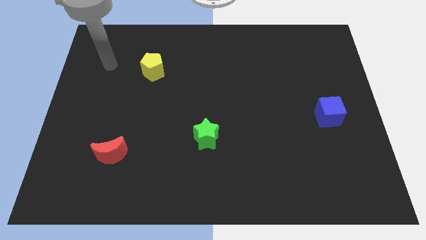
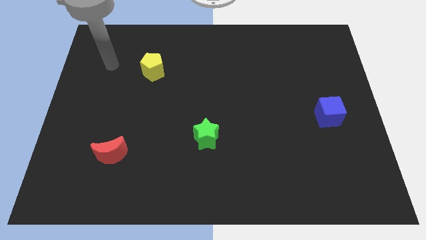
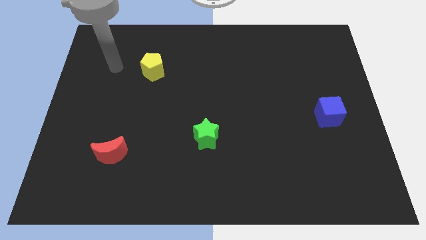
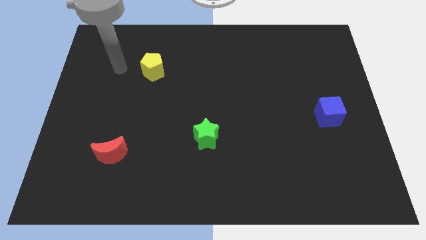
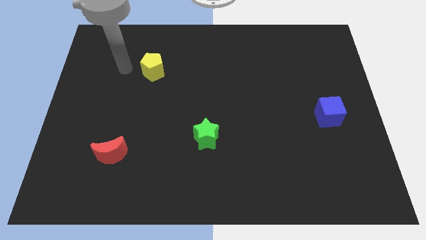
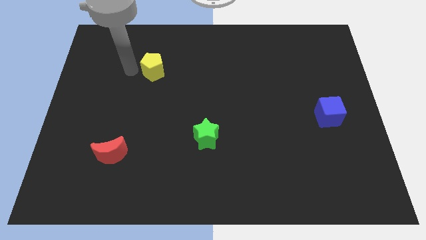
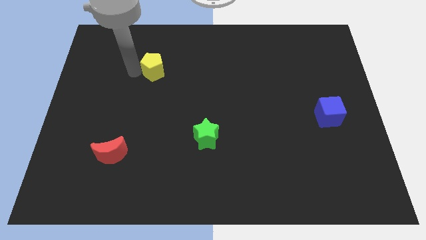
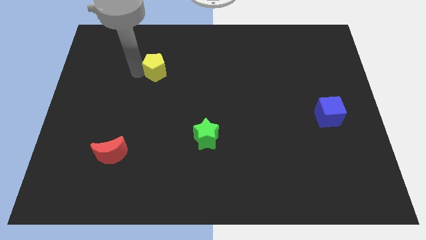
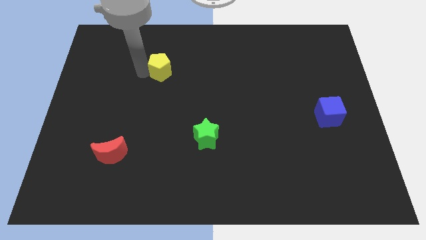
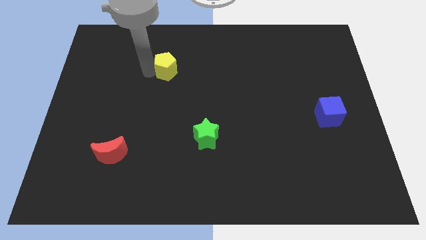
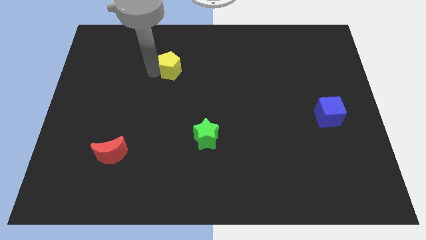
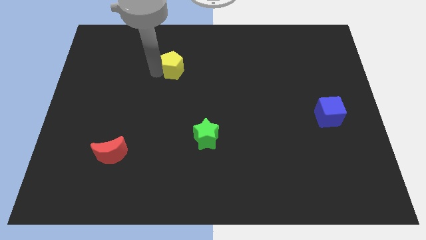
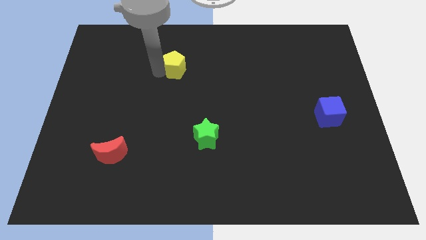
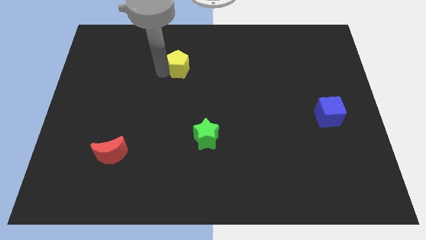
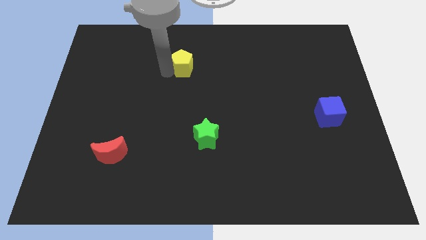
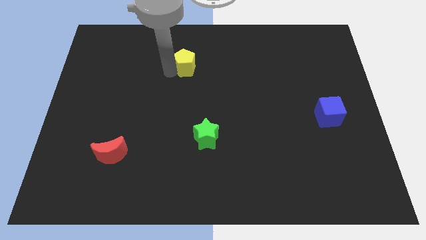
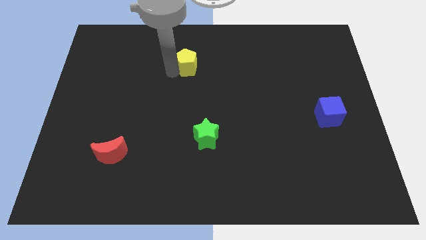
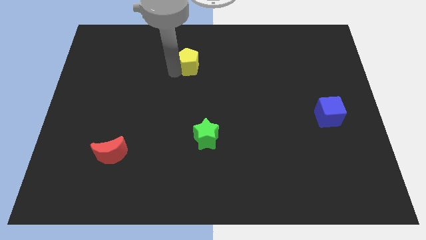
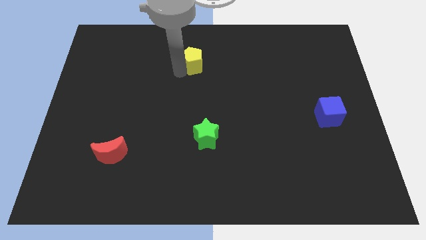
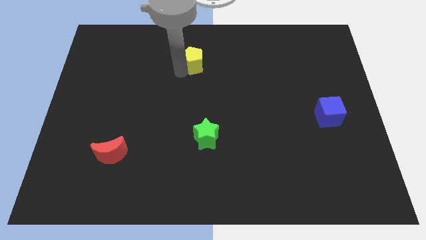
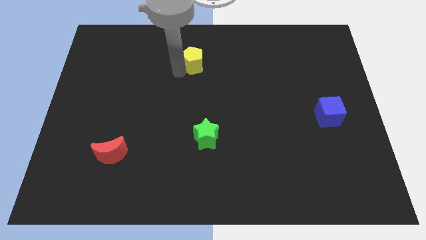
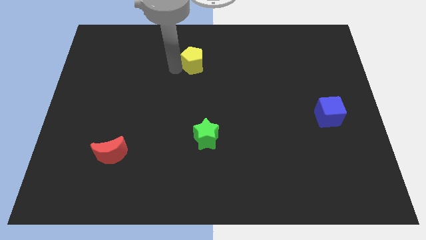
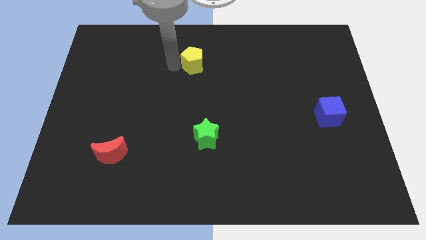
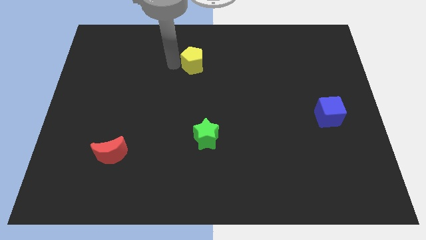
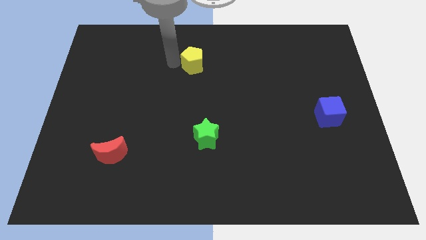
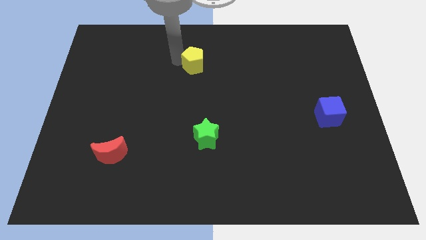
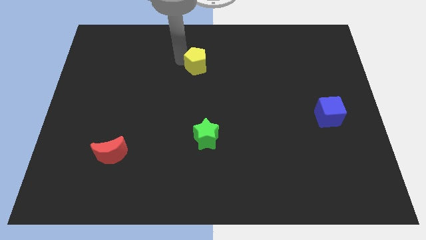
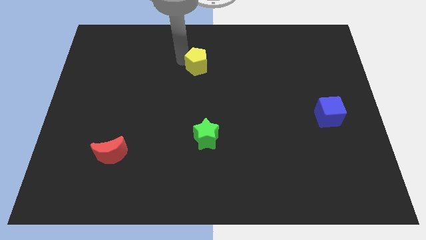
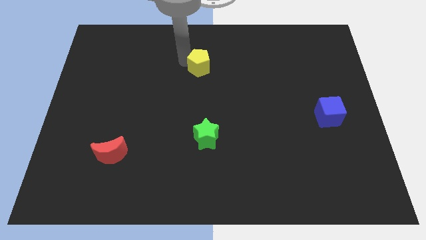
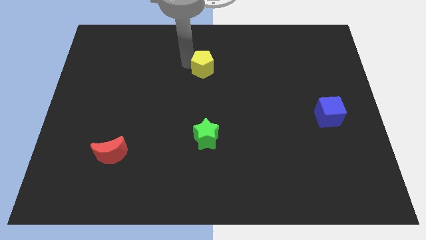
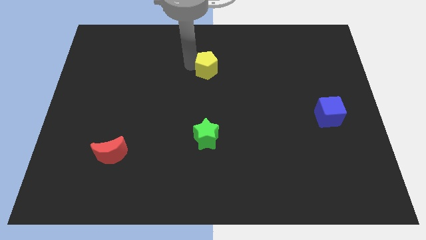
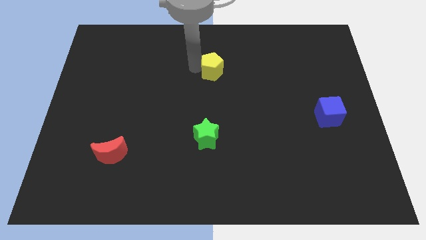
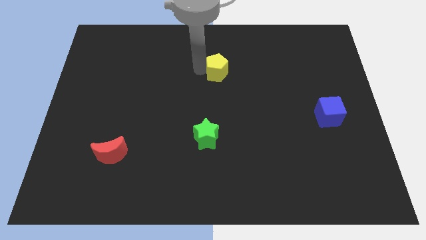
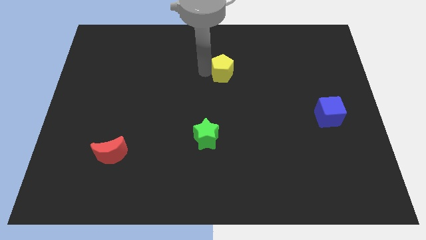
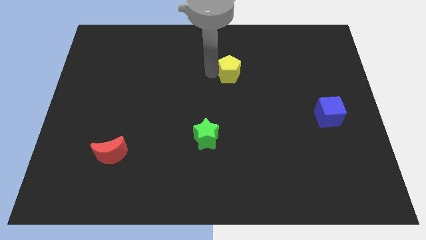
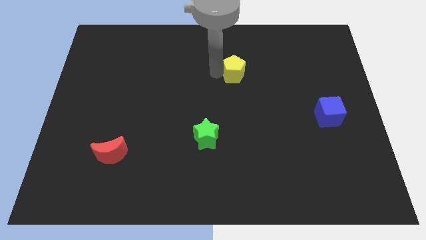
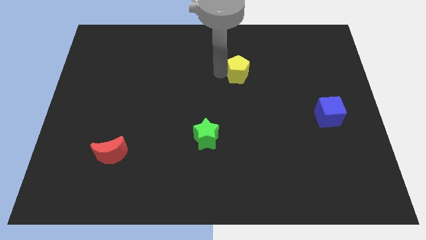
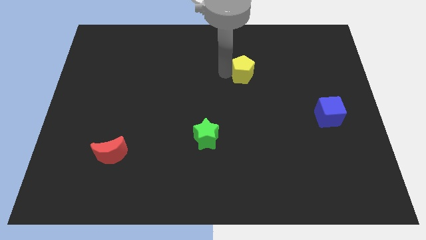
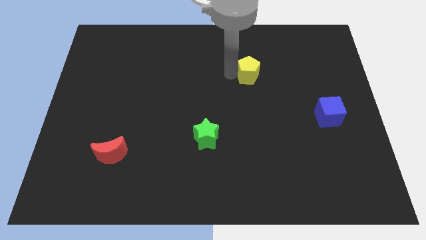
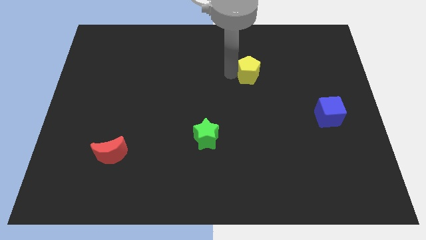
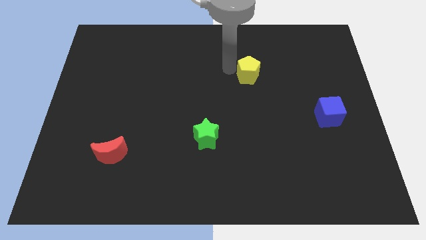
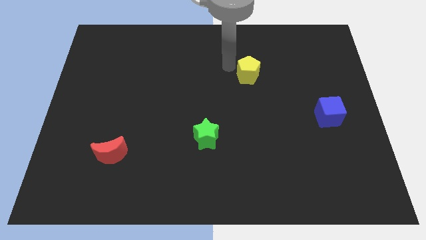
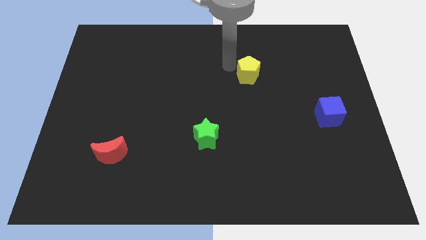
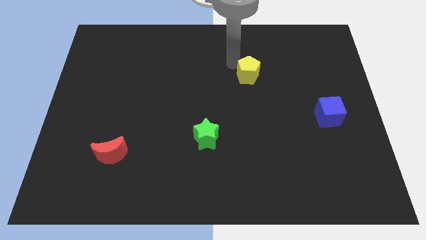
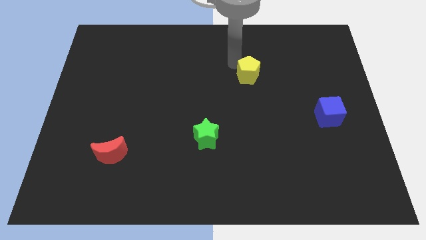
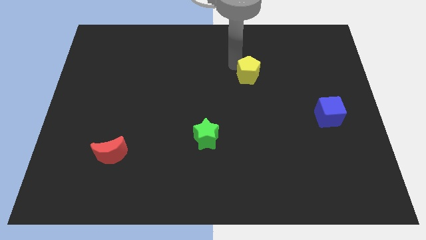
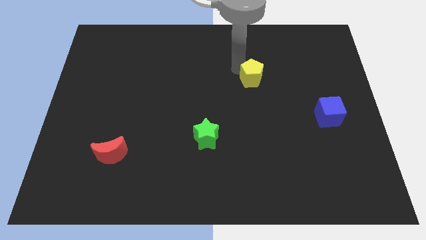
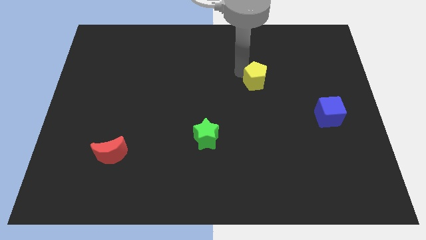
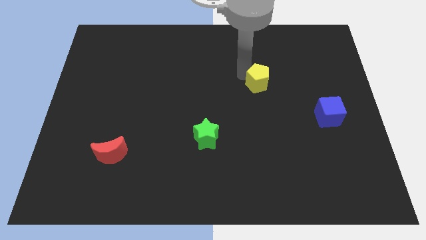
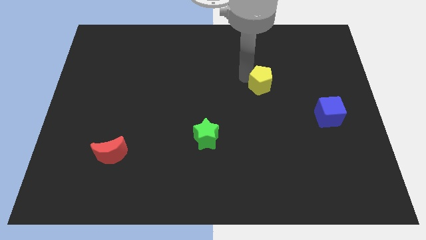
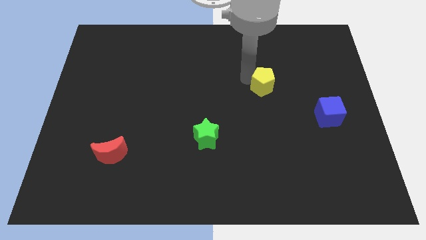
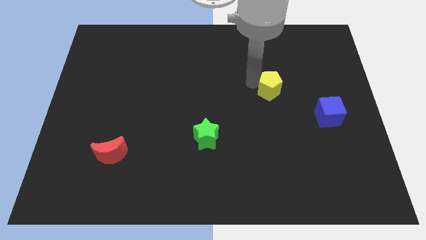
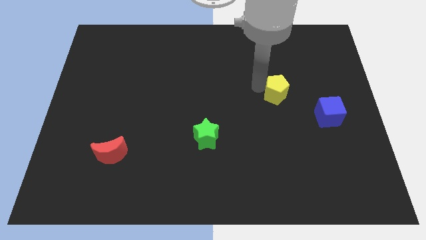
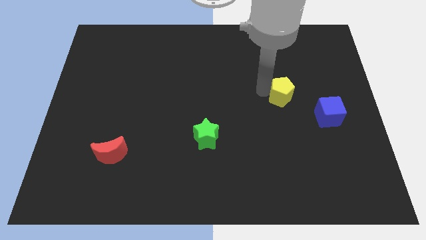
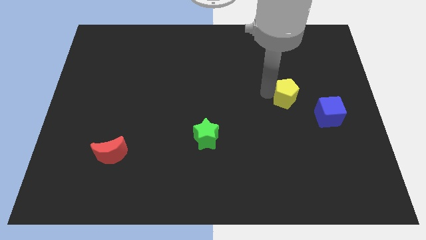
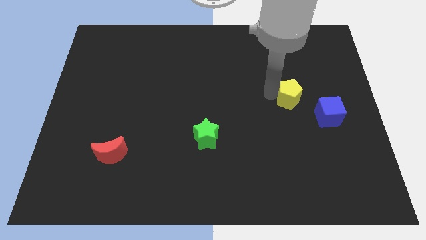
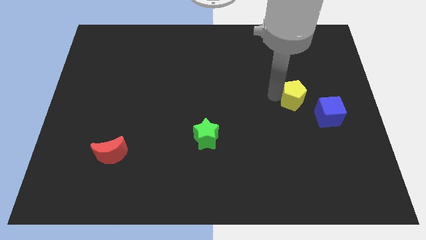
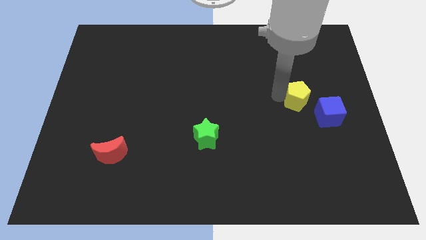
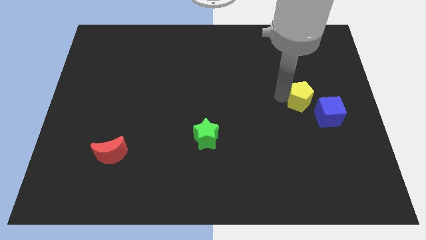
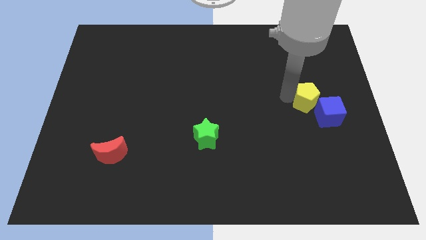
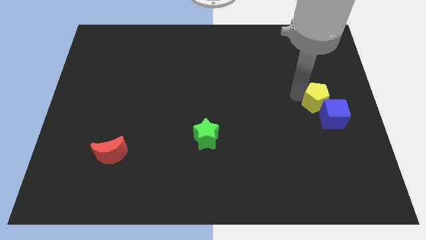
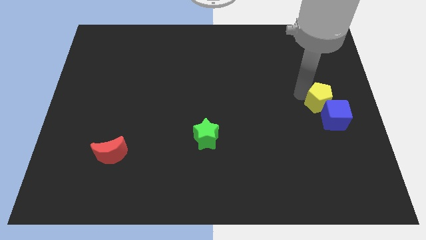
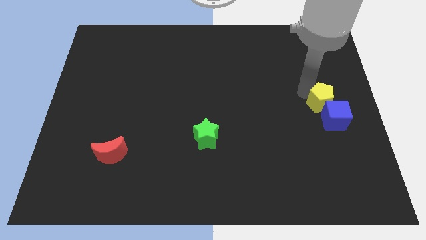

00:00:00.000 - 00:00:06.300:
put the yellow pentagon close to the blue cube

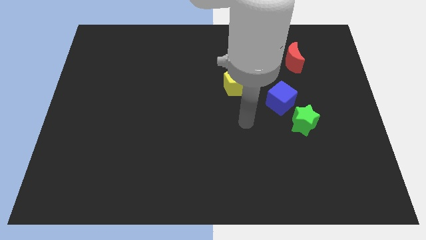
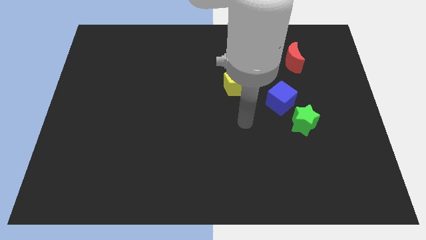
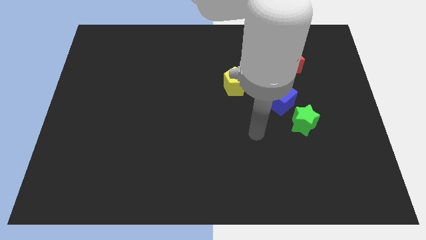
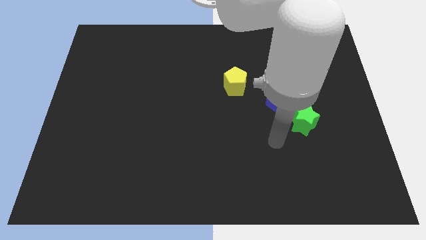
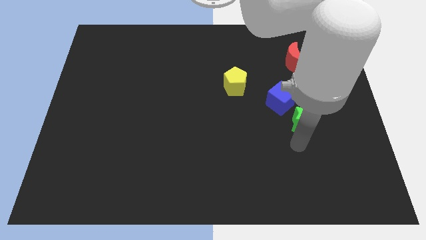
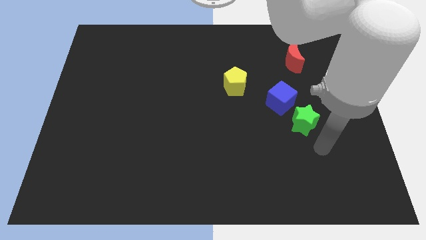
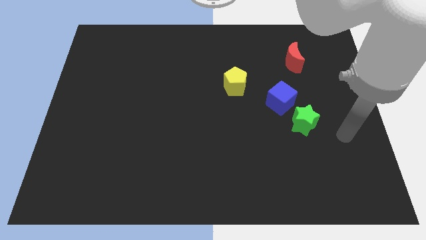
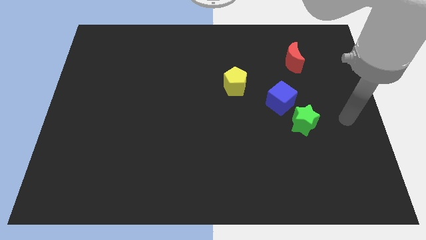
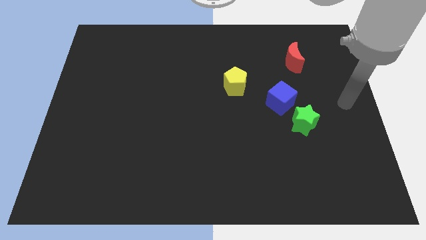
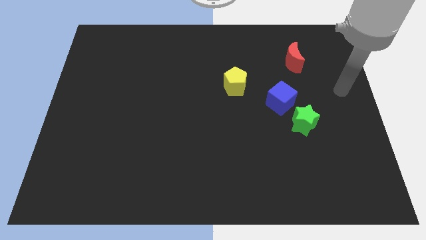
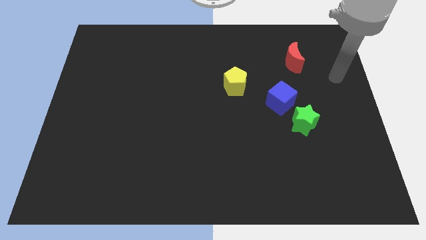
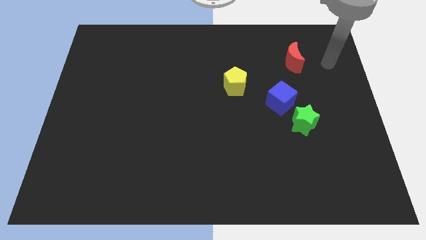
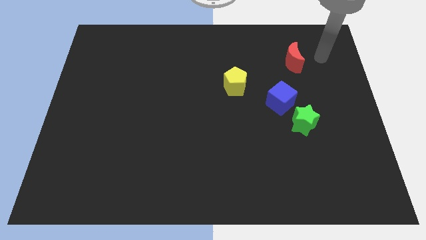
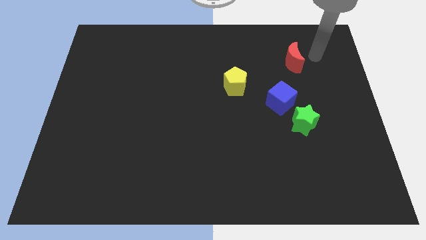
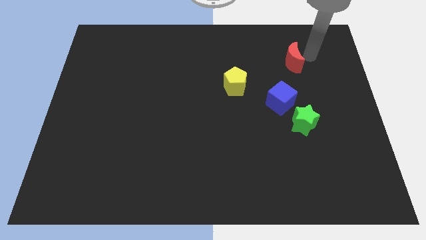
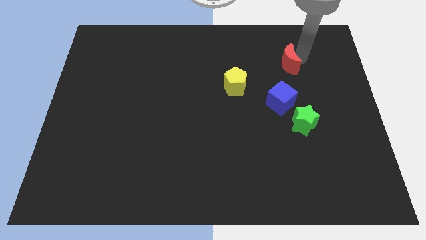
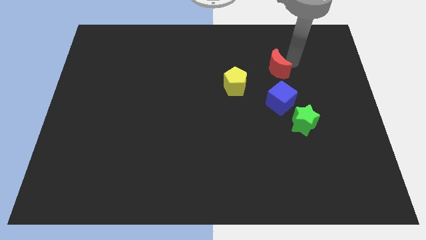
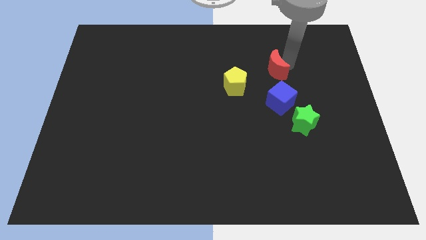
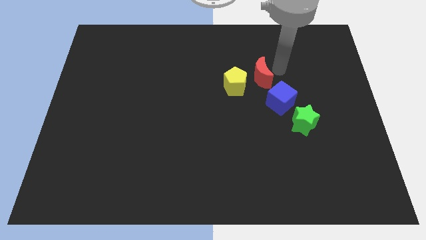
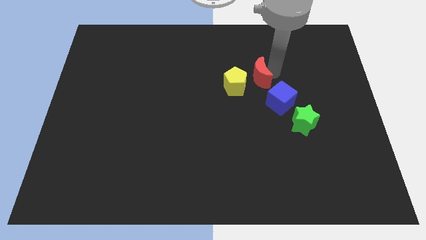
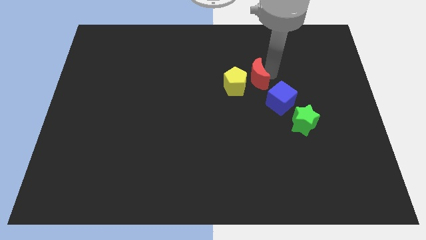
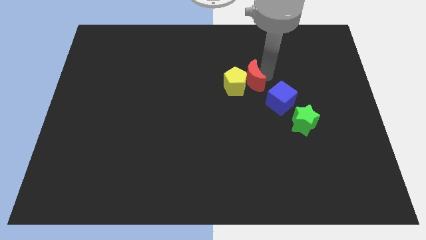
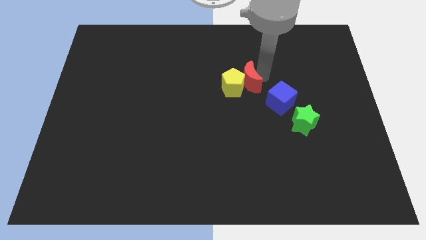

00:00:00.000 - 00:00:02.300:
move the red block to the pentagon
